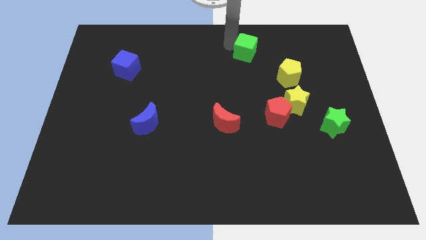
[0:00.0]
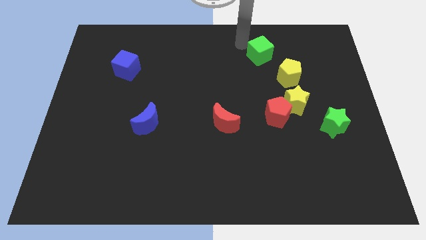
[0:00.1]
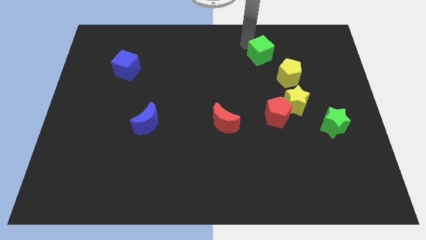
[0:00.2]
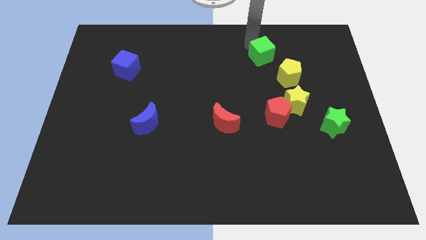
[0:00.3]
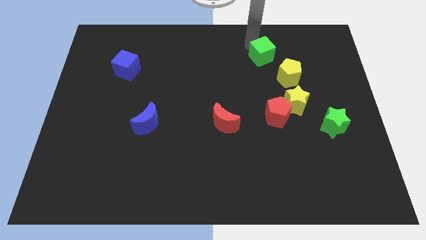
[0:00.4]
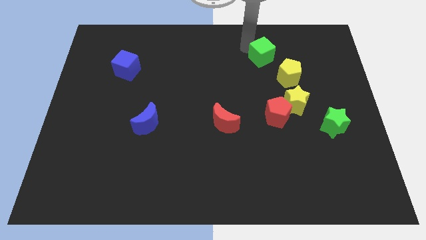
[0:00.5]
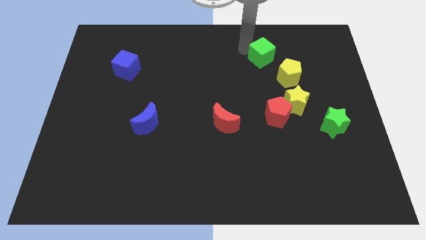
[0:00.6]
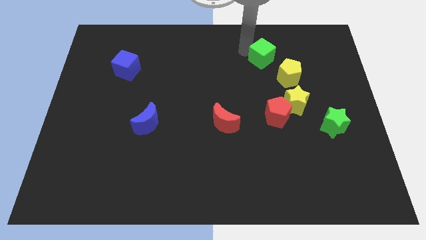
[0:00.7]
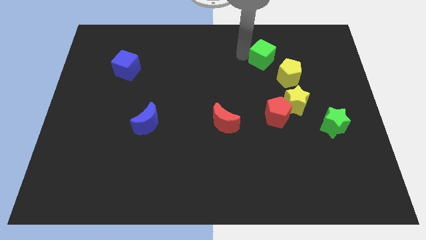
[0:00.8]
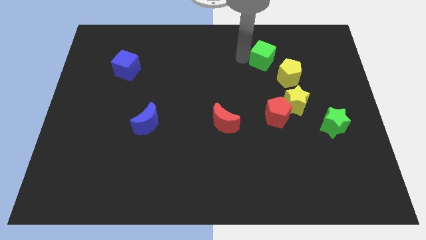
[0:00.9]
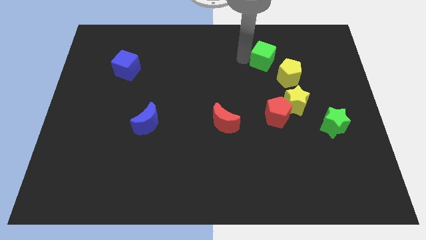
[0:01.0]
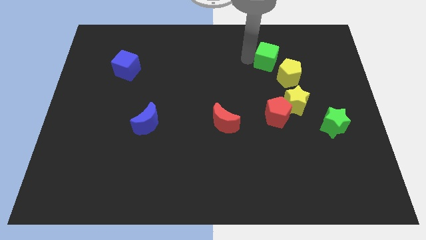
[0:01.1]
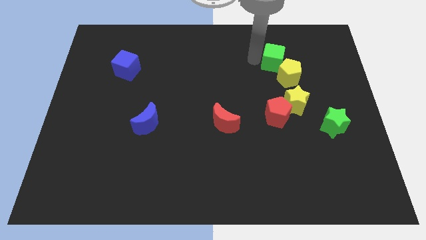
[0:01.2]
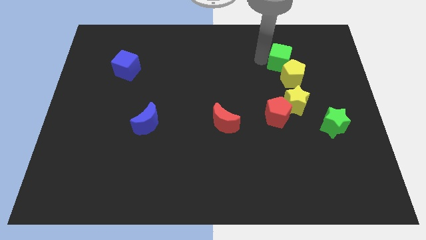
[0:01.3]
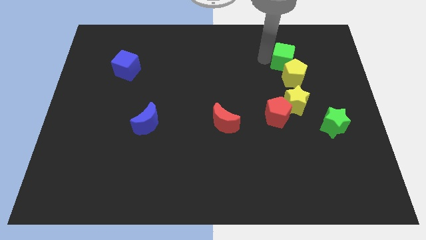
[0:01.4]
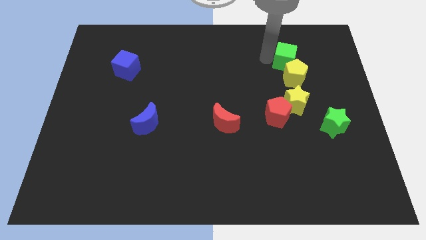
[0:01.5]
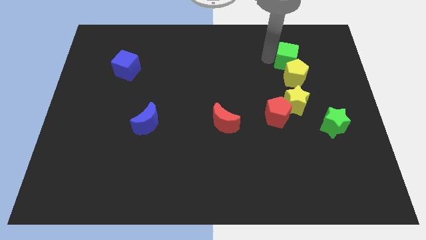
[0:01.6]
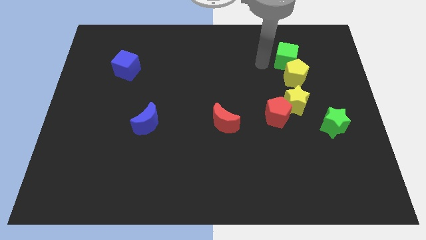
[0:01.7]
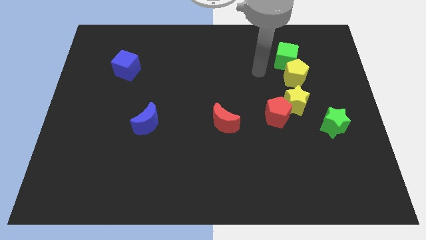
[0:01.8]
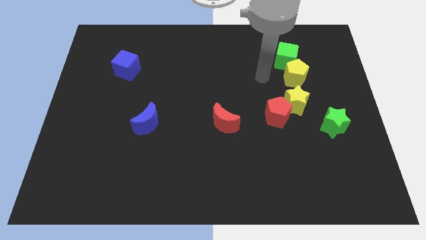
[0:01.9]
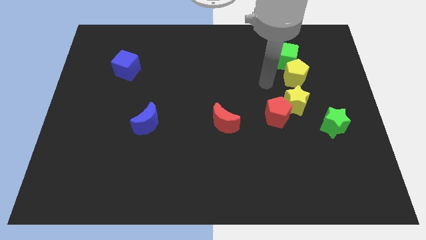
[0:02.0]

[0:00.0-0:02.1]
push the green cube into the yellow pentagon

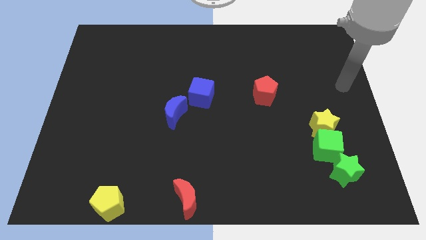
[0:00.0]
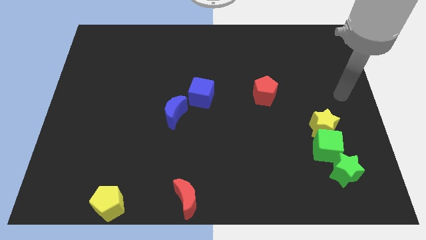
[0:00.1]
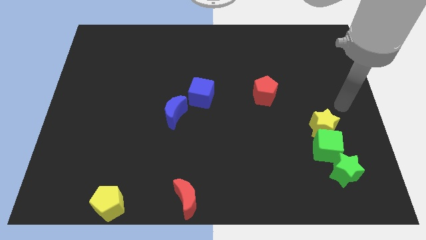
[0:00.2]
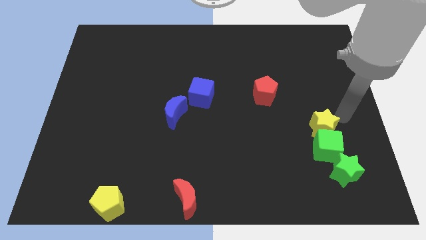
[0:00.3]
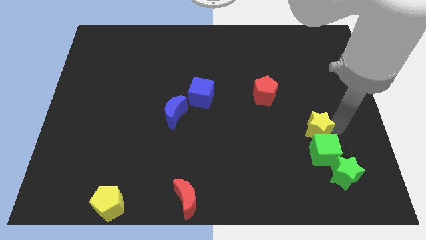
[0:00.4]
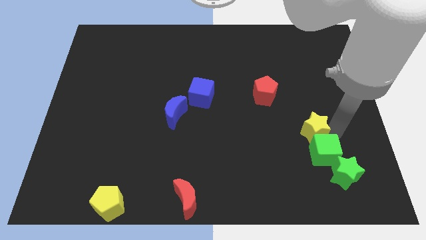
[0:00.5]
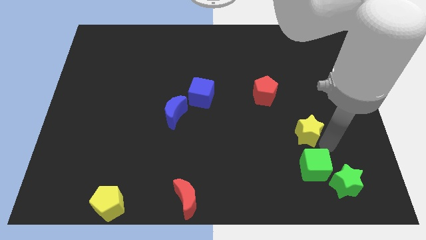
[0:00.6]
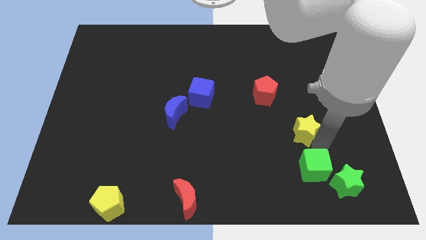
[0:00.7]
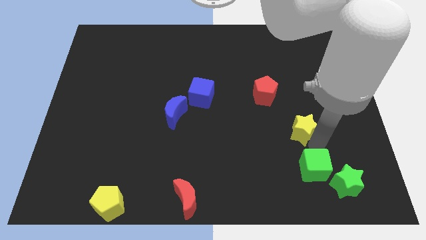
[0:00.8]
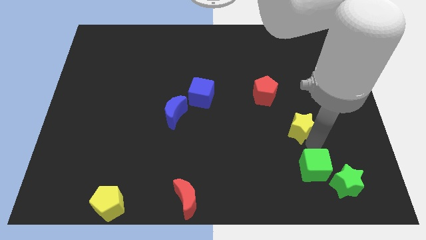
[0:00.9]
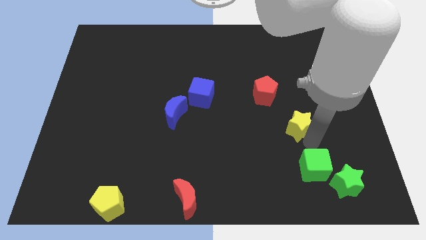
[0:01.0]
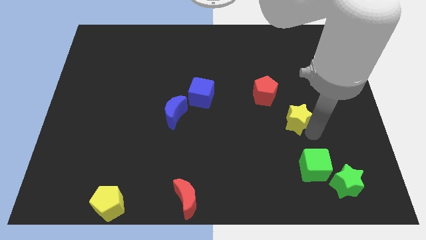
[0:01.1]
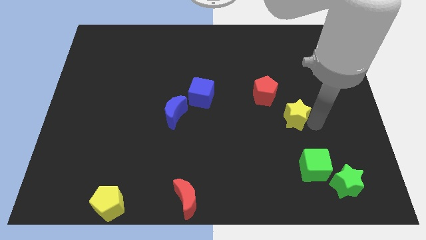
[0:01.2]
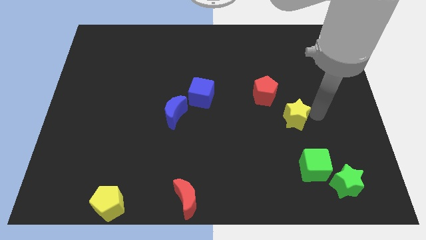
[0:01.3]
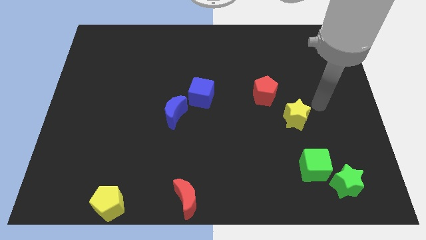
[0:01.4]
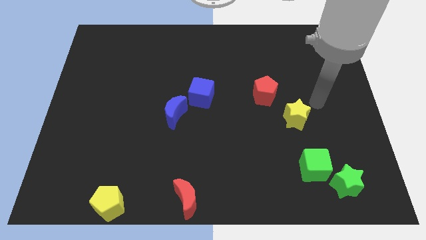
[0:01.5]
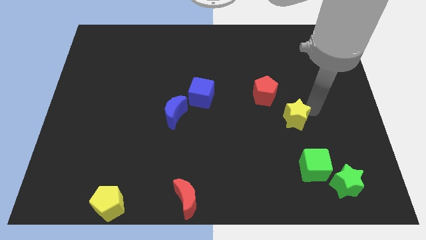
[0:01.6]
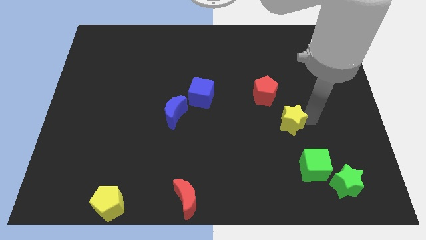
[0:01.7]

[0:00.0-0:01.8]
separate the yellow star from the green cube

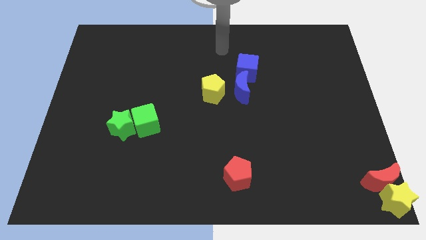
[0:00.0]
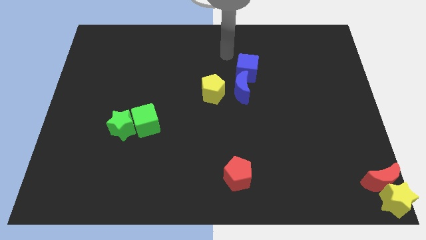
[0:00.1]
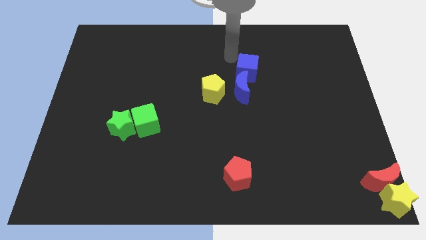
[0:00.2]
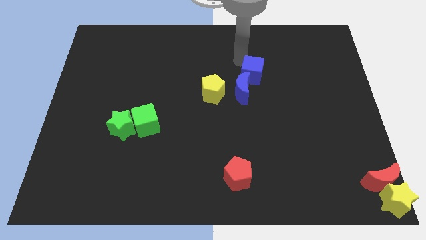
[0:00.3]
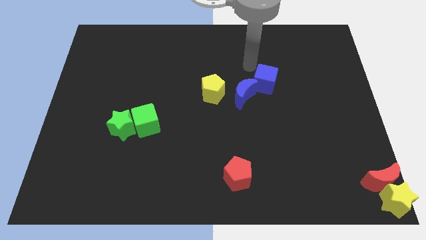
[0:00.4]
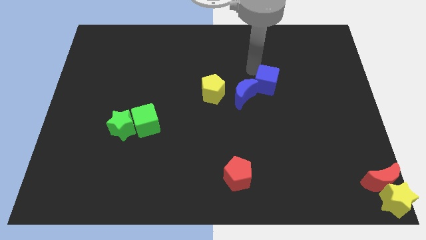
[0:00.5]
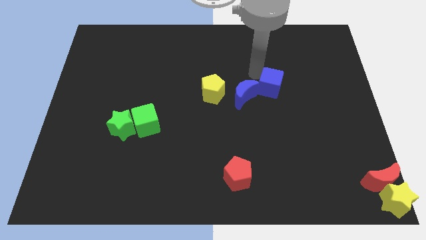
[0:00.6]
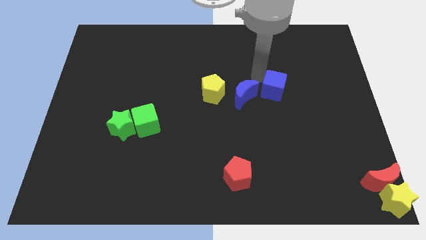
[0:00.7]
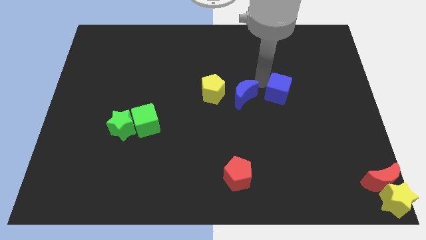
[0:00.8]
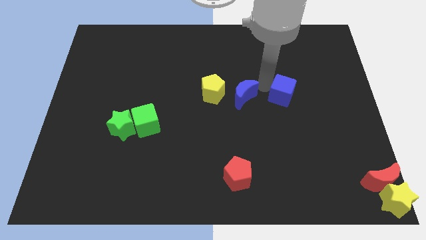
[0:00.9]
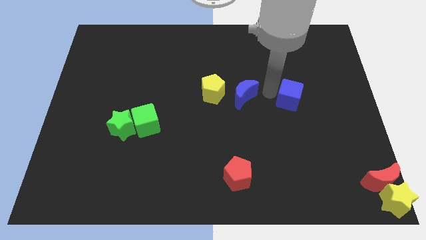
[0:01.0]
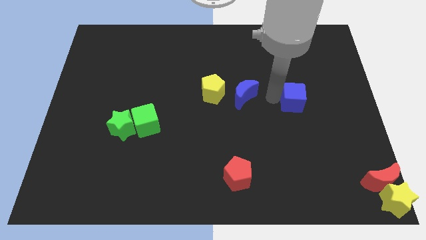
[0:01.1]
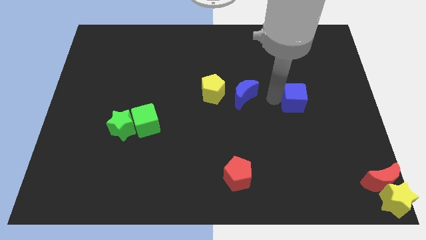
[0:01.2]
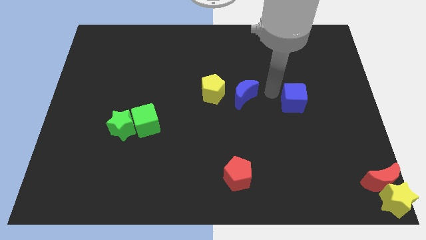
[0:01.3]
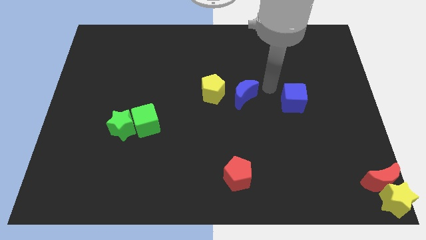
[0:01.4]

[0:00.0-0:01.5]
move the blue cube to the right side of the blue crescent

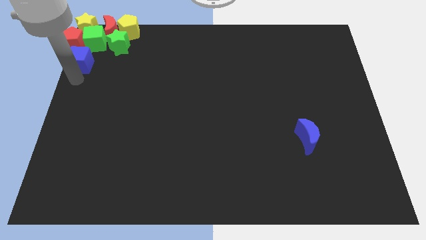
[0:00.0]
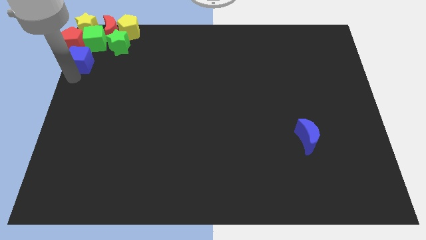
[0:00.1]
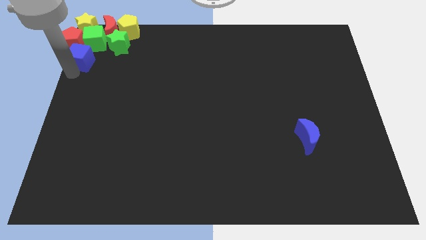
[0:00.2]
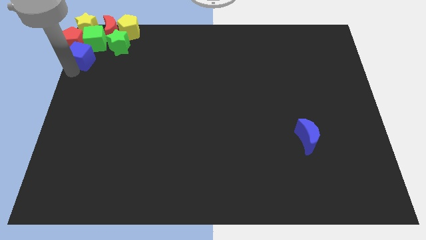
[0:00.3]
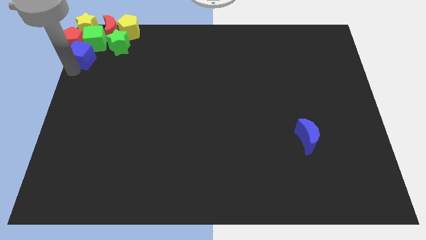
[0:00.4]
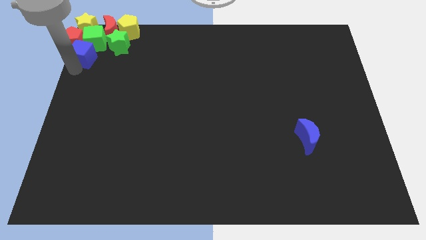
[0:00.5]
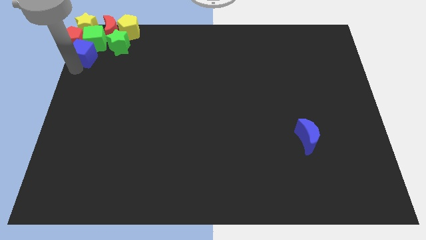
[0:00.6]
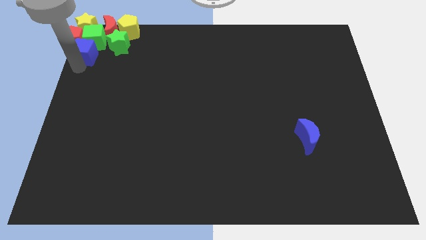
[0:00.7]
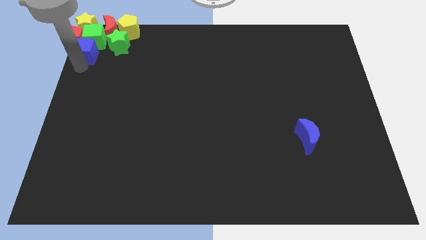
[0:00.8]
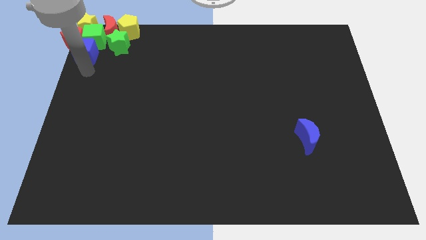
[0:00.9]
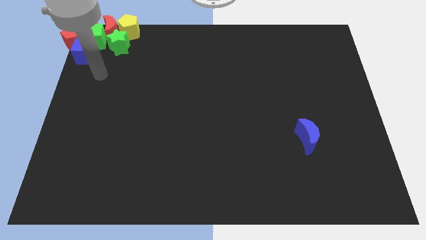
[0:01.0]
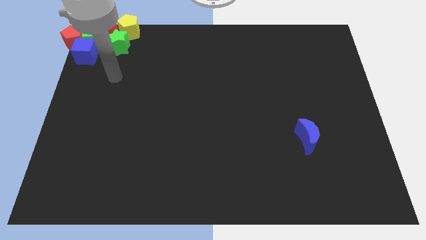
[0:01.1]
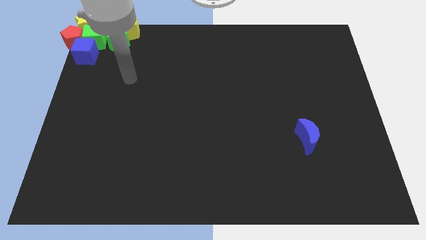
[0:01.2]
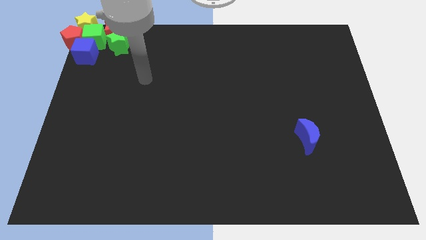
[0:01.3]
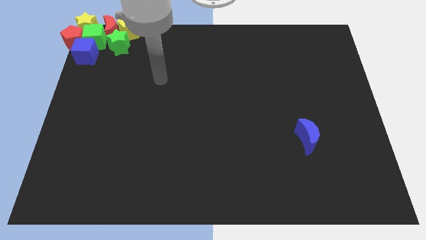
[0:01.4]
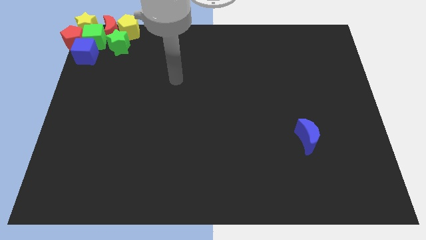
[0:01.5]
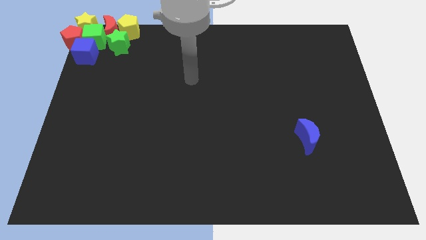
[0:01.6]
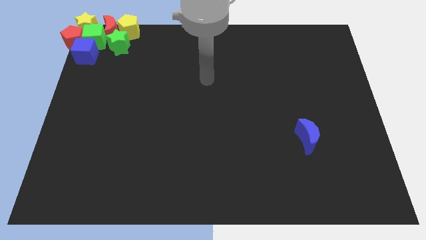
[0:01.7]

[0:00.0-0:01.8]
push the blue cube into the green cube

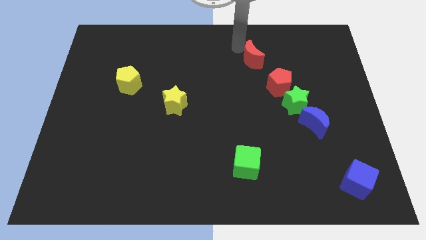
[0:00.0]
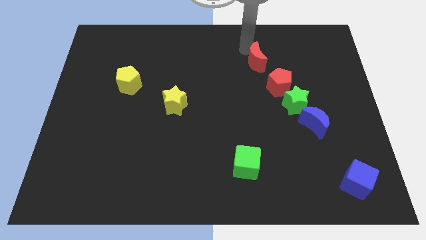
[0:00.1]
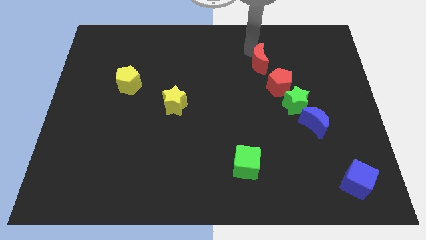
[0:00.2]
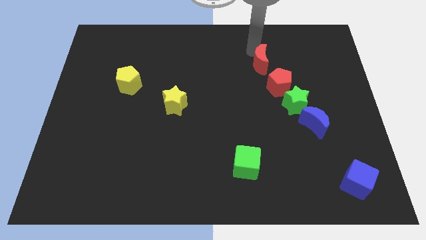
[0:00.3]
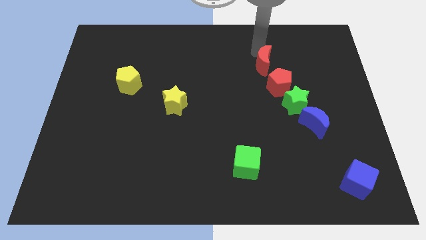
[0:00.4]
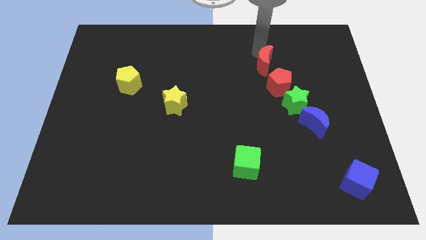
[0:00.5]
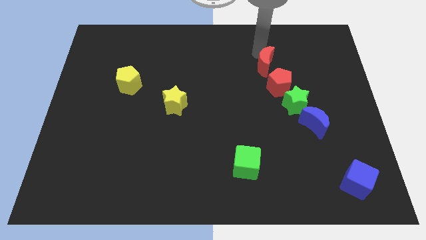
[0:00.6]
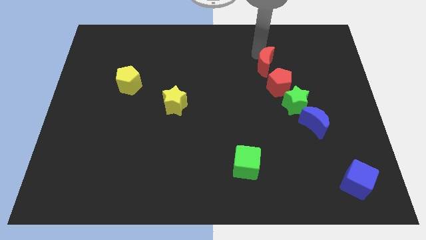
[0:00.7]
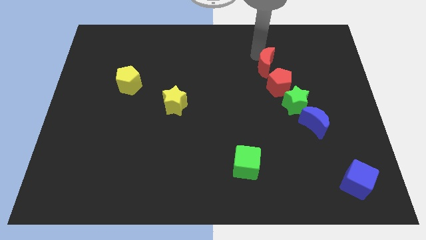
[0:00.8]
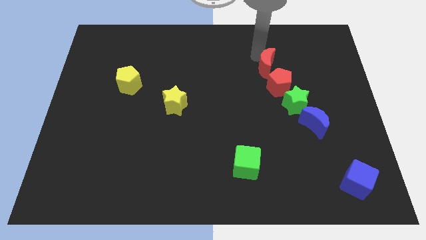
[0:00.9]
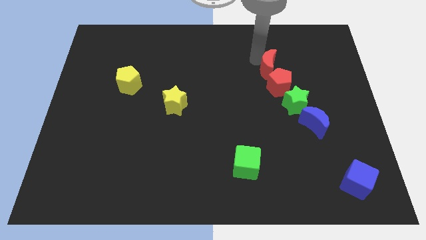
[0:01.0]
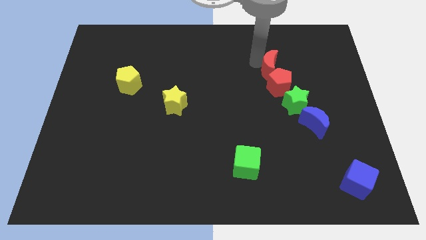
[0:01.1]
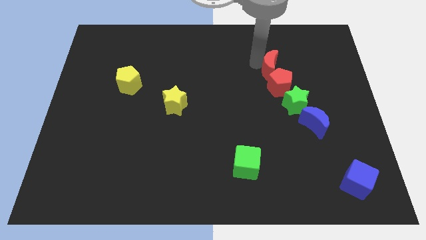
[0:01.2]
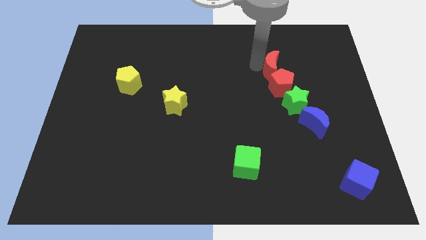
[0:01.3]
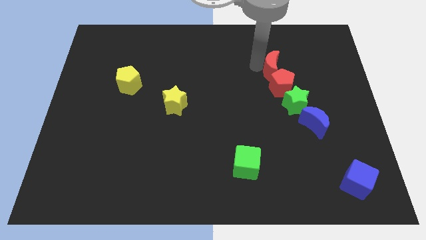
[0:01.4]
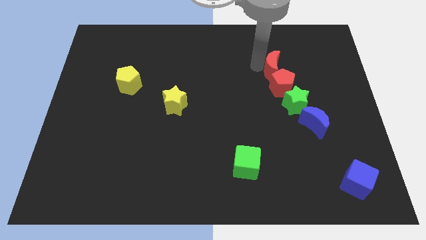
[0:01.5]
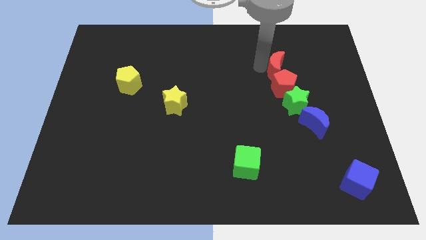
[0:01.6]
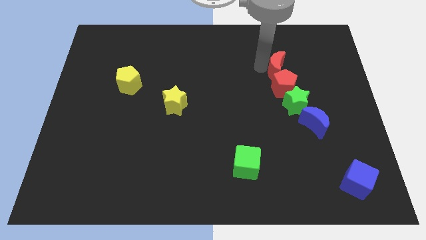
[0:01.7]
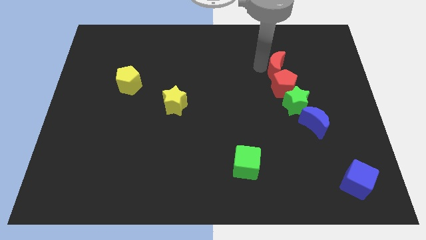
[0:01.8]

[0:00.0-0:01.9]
move the red moon into the red pentagon
